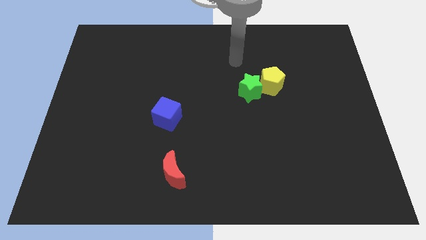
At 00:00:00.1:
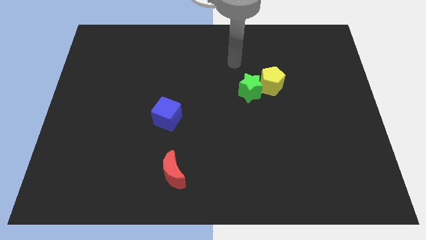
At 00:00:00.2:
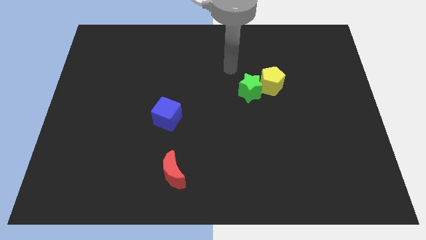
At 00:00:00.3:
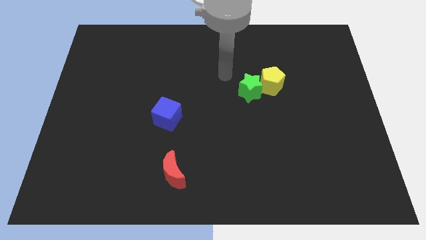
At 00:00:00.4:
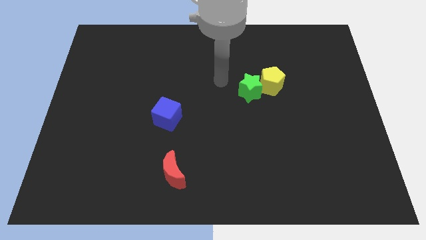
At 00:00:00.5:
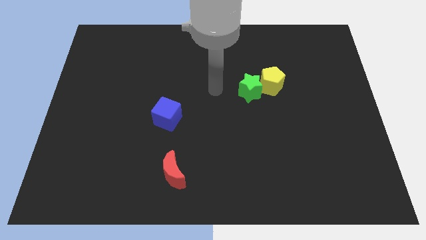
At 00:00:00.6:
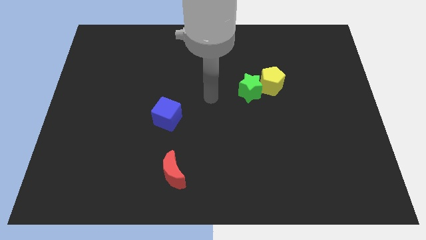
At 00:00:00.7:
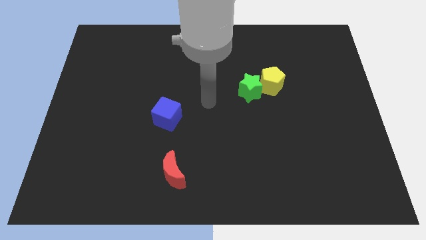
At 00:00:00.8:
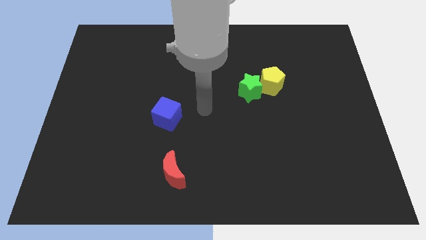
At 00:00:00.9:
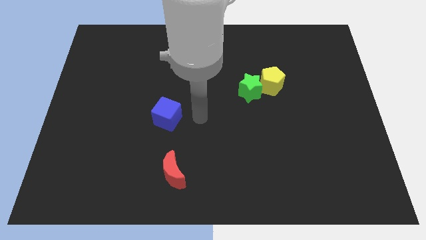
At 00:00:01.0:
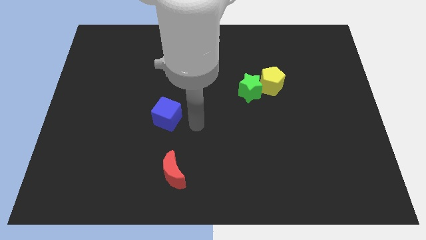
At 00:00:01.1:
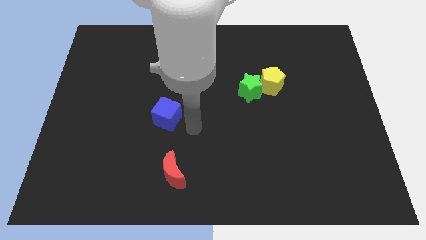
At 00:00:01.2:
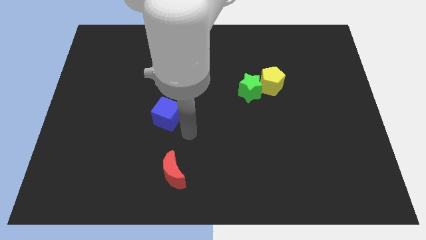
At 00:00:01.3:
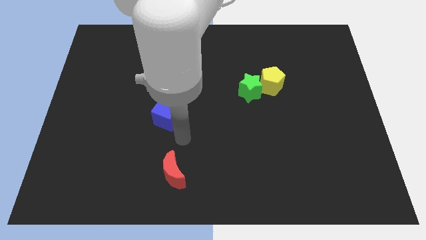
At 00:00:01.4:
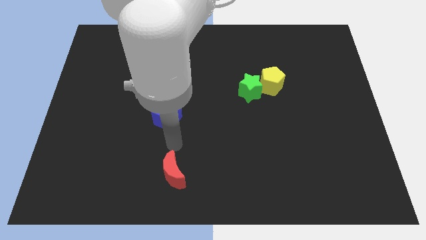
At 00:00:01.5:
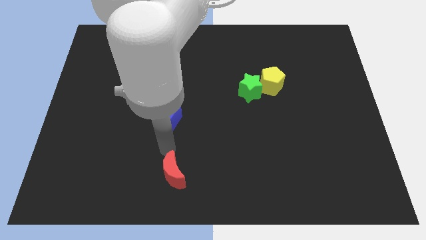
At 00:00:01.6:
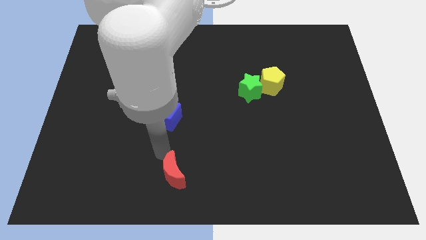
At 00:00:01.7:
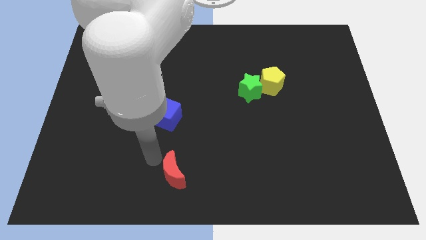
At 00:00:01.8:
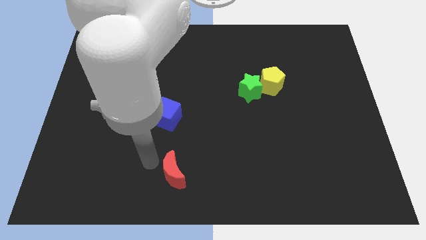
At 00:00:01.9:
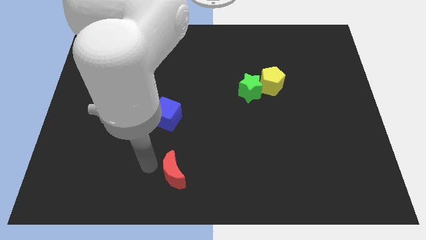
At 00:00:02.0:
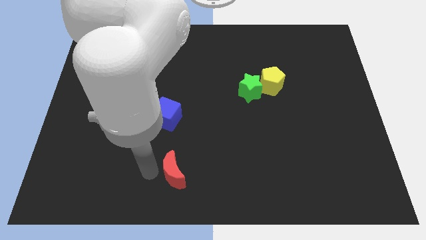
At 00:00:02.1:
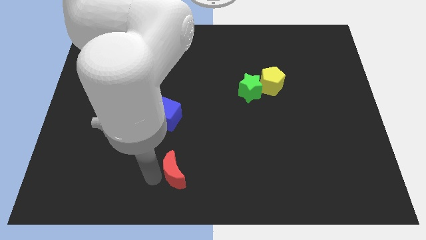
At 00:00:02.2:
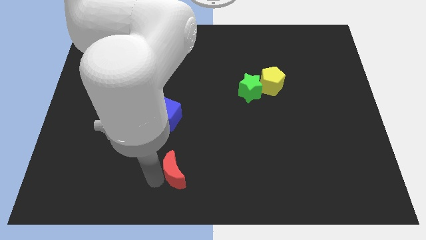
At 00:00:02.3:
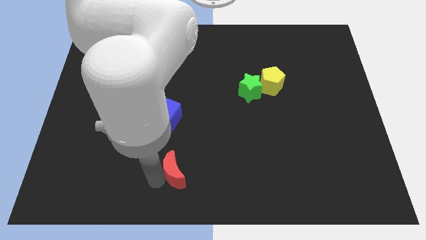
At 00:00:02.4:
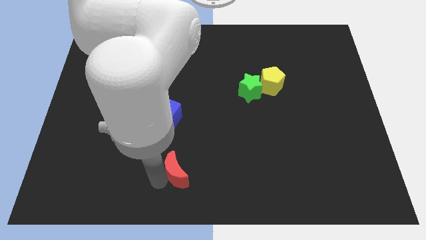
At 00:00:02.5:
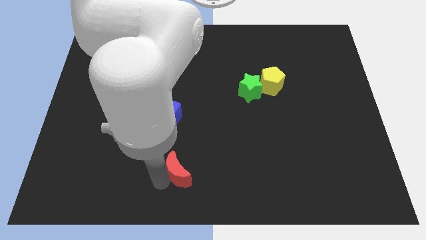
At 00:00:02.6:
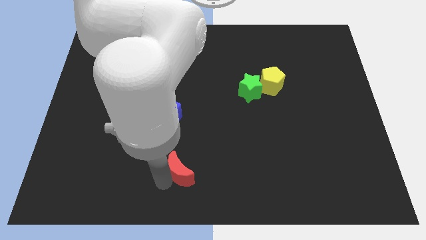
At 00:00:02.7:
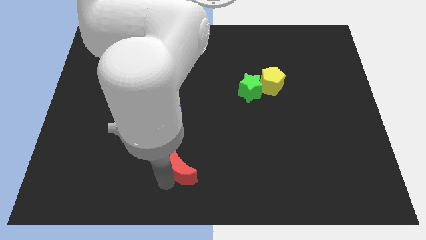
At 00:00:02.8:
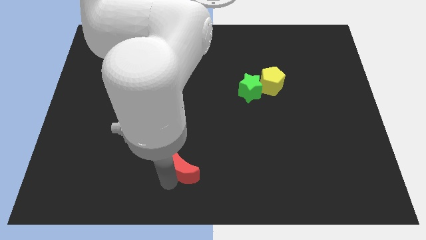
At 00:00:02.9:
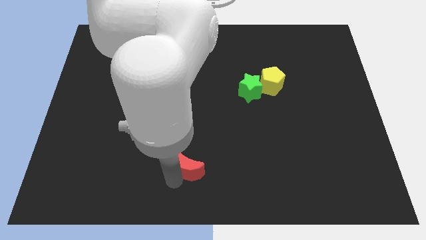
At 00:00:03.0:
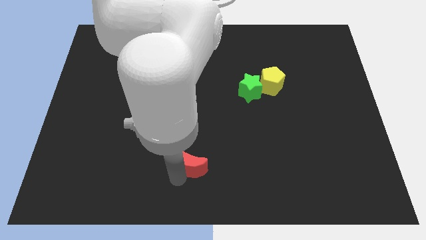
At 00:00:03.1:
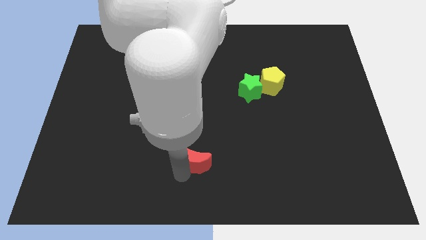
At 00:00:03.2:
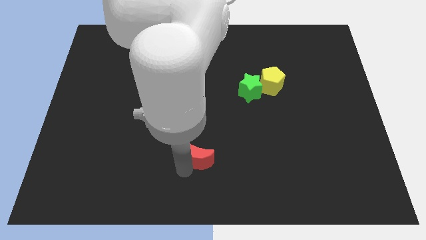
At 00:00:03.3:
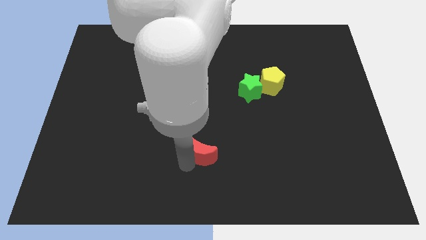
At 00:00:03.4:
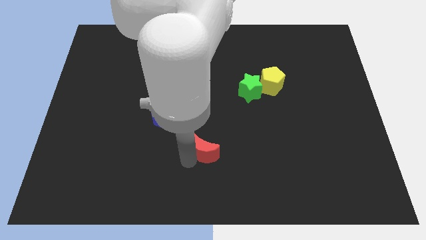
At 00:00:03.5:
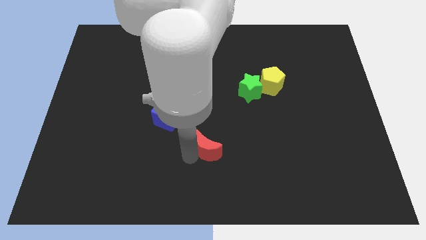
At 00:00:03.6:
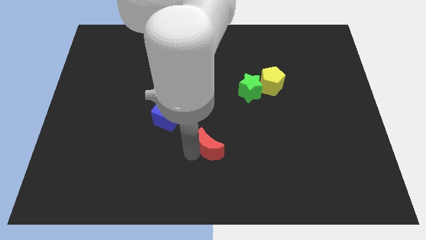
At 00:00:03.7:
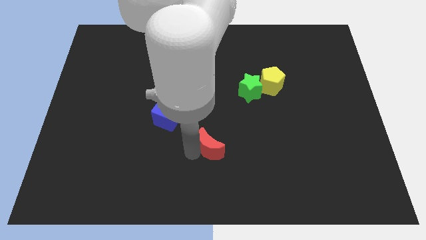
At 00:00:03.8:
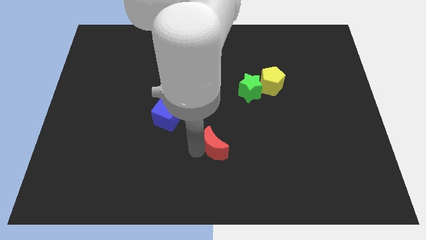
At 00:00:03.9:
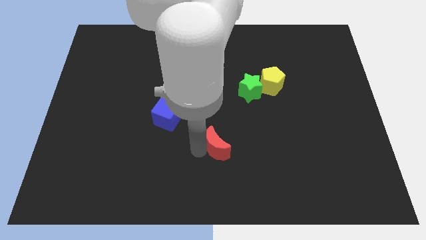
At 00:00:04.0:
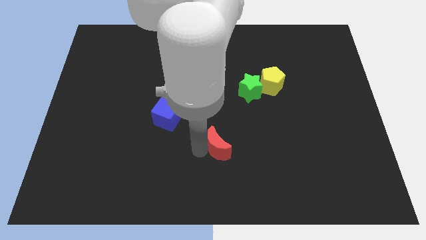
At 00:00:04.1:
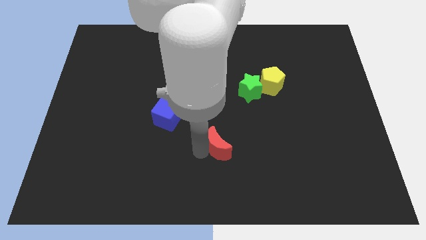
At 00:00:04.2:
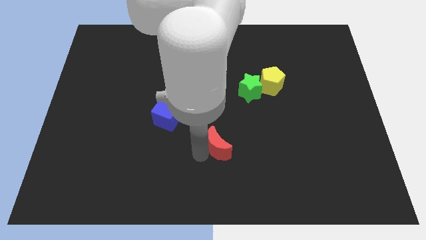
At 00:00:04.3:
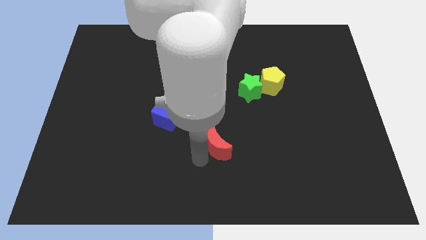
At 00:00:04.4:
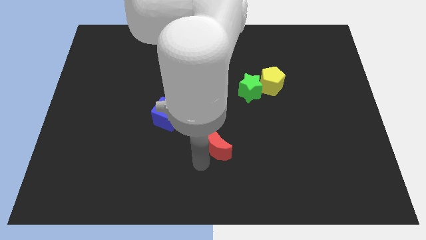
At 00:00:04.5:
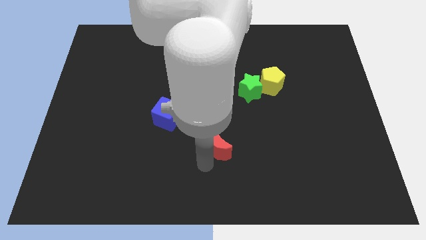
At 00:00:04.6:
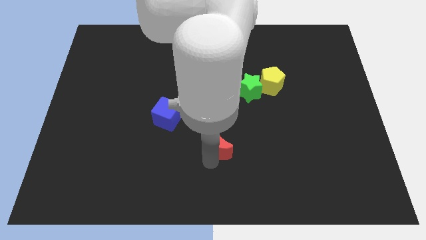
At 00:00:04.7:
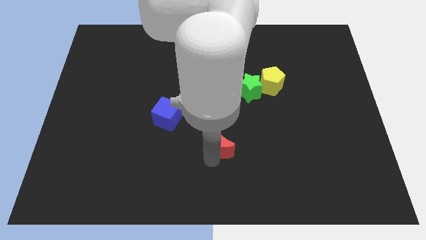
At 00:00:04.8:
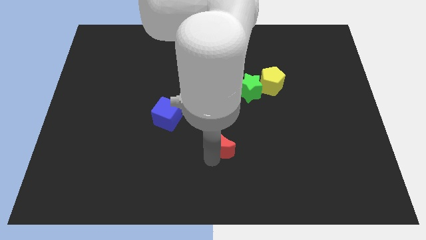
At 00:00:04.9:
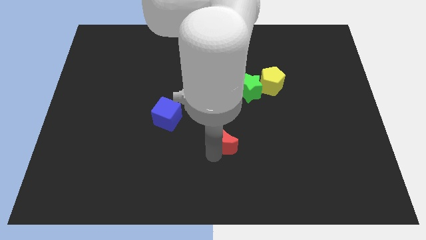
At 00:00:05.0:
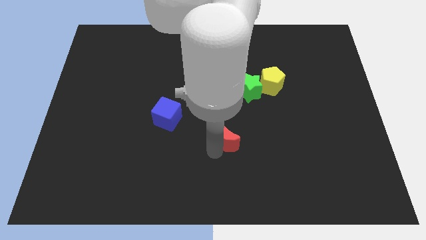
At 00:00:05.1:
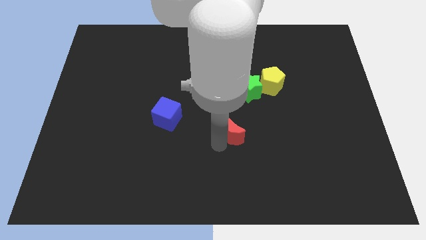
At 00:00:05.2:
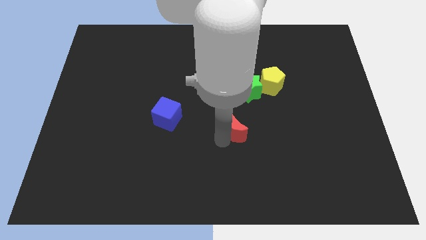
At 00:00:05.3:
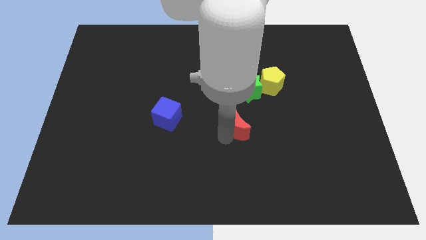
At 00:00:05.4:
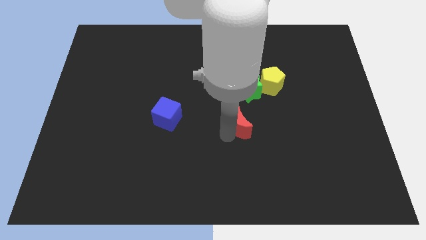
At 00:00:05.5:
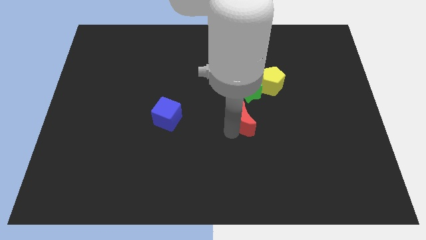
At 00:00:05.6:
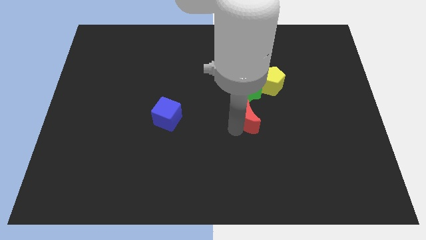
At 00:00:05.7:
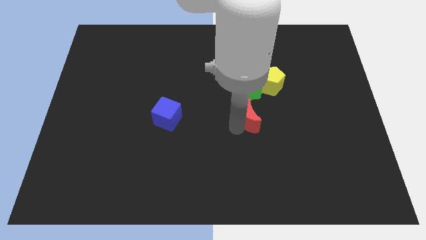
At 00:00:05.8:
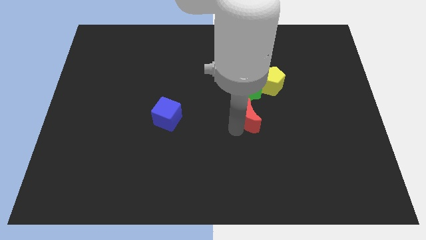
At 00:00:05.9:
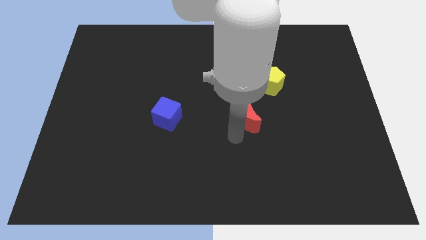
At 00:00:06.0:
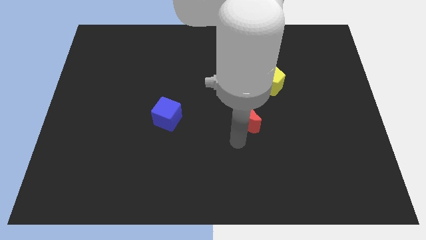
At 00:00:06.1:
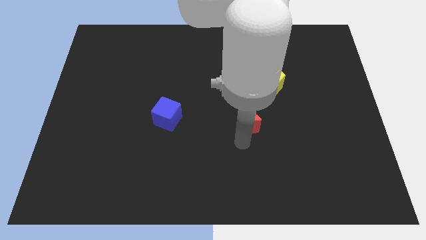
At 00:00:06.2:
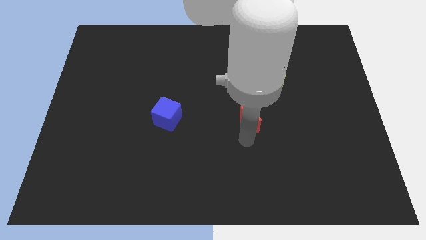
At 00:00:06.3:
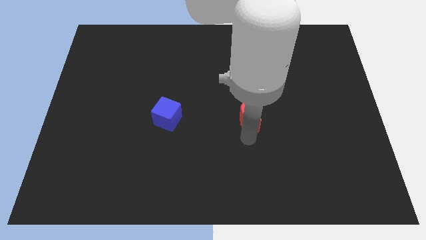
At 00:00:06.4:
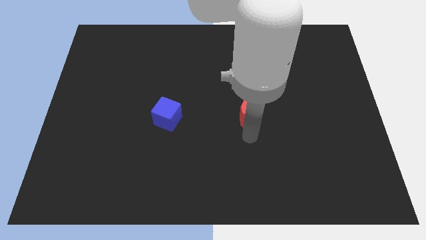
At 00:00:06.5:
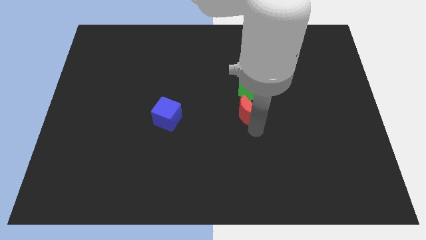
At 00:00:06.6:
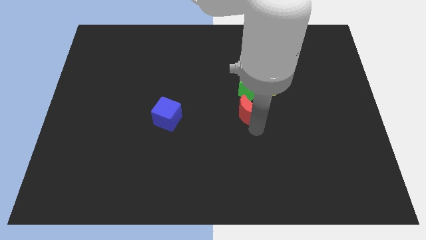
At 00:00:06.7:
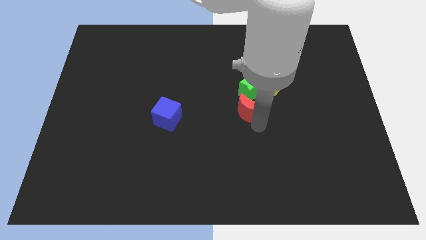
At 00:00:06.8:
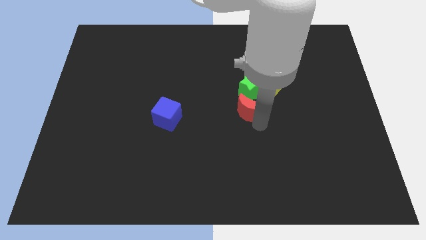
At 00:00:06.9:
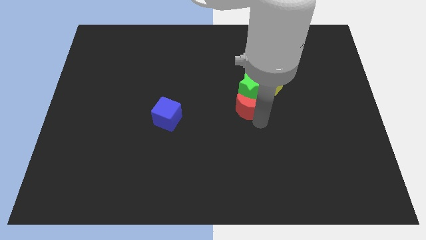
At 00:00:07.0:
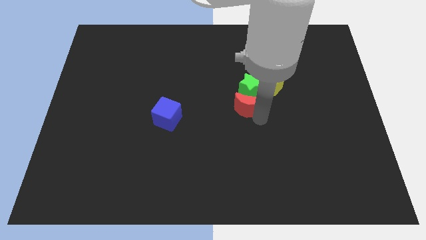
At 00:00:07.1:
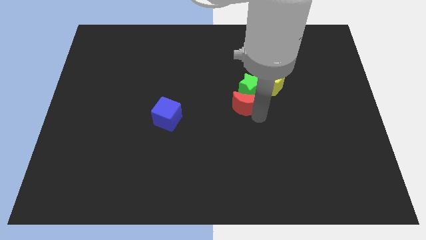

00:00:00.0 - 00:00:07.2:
push the red block to the green block

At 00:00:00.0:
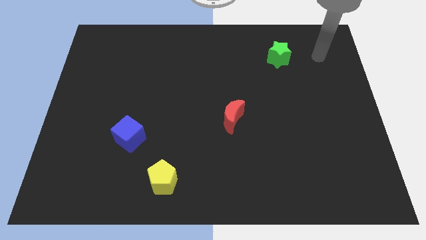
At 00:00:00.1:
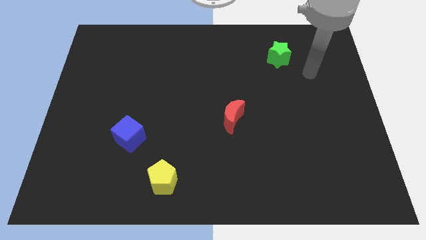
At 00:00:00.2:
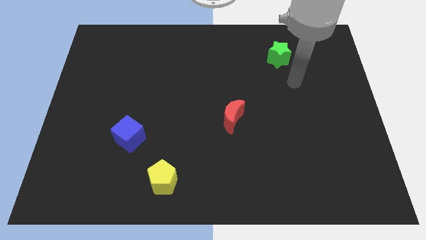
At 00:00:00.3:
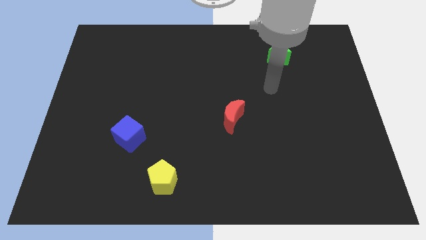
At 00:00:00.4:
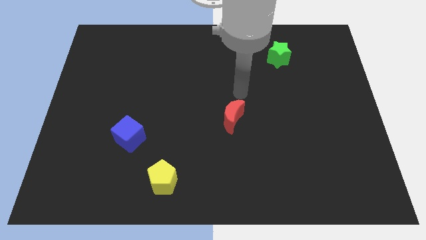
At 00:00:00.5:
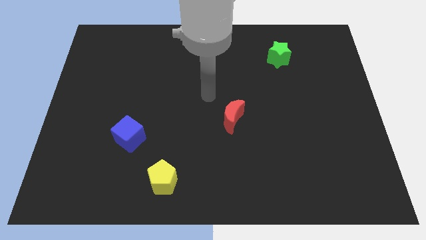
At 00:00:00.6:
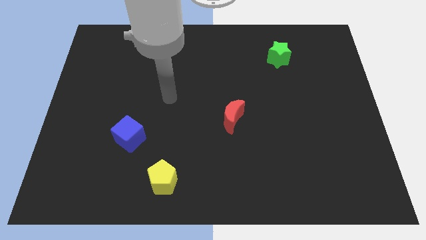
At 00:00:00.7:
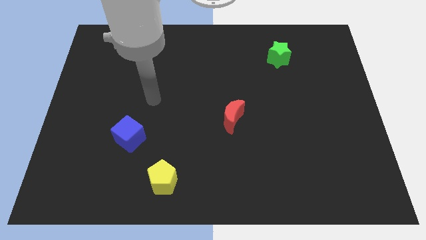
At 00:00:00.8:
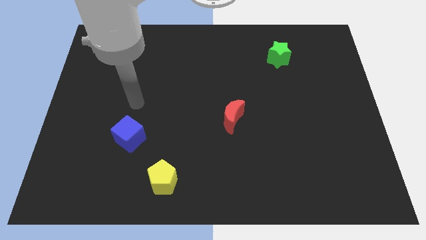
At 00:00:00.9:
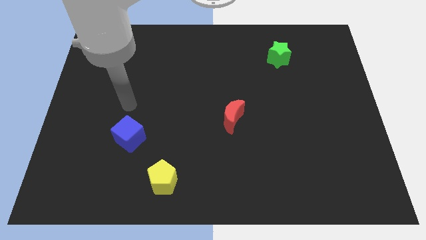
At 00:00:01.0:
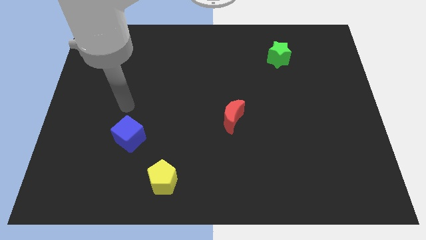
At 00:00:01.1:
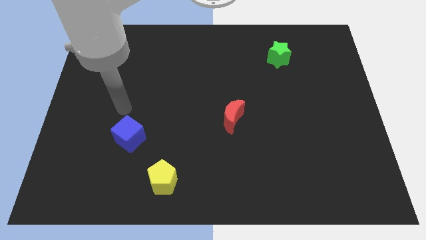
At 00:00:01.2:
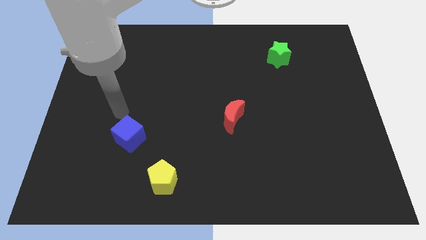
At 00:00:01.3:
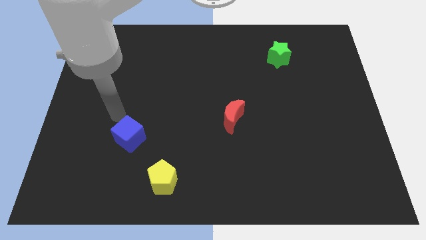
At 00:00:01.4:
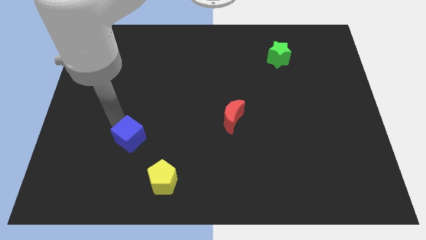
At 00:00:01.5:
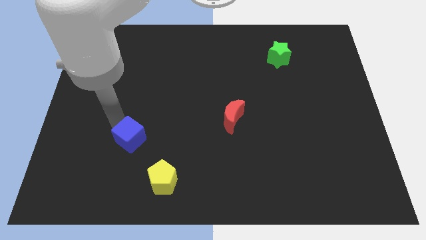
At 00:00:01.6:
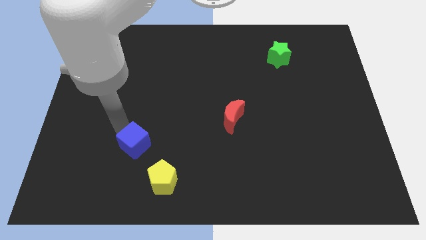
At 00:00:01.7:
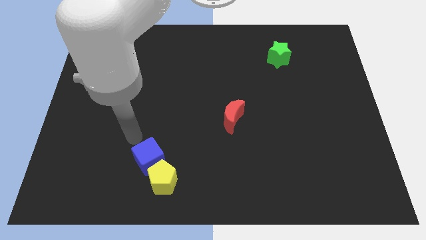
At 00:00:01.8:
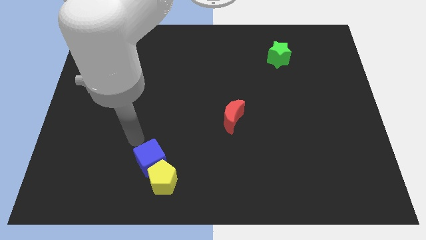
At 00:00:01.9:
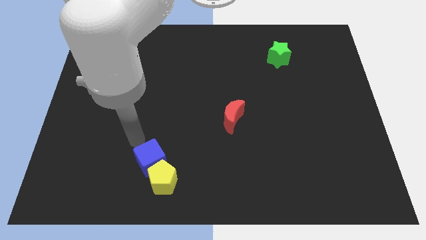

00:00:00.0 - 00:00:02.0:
put the cube next to the yellow block
